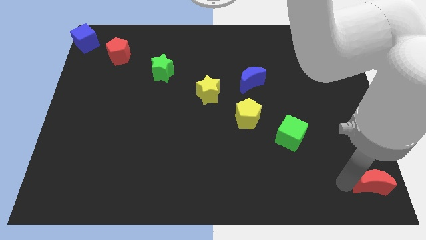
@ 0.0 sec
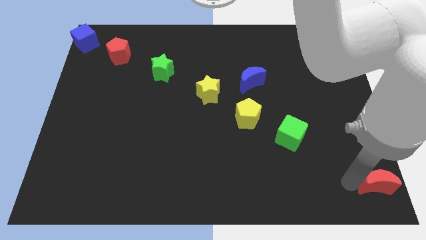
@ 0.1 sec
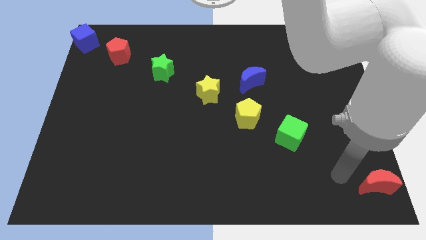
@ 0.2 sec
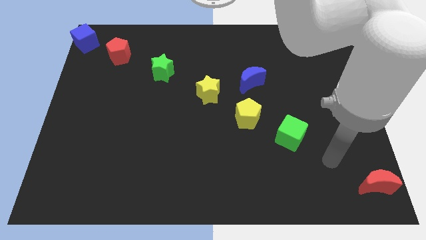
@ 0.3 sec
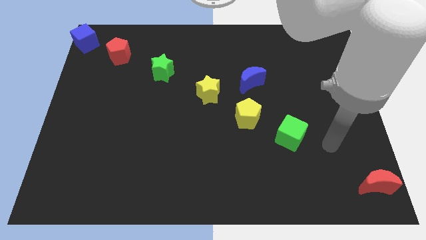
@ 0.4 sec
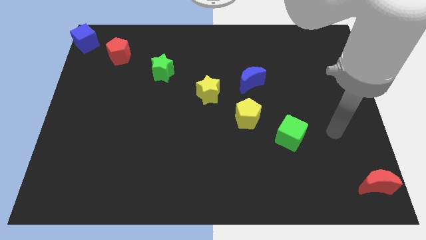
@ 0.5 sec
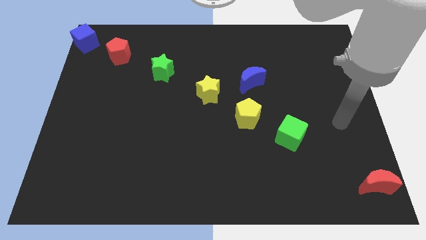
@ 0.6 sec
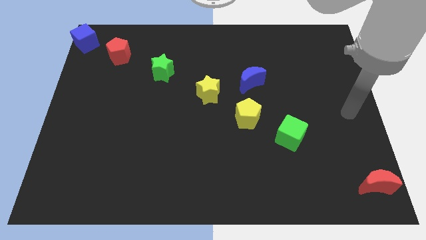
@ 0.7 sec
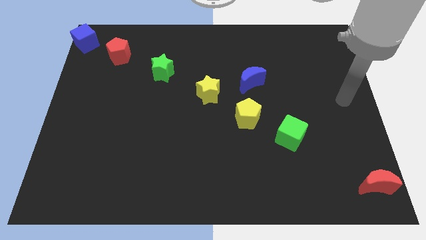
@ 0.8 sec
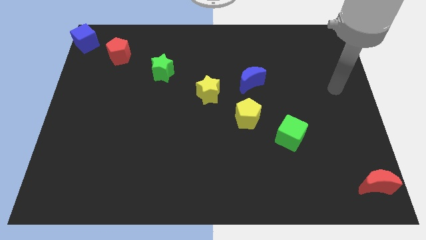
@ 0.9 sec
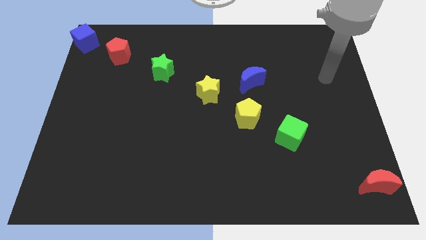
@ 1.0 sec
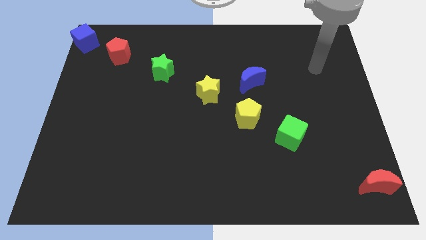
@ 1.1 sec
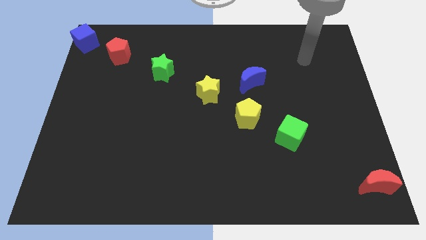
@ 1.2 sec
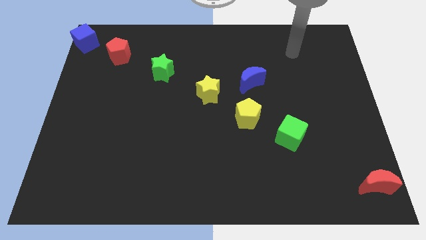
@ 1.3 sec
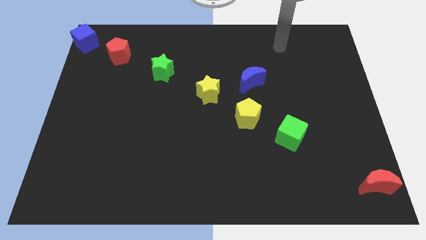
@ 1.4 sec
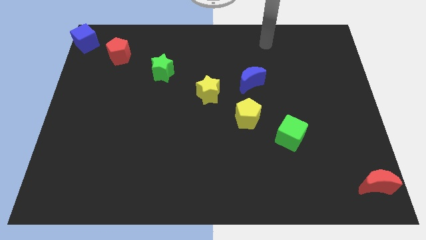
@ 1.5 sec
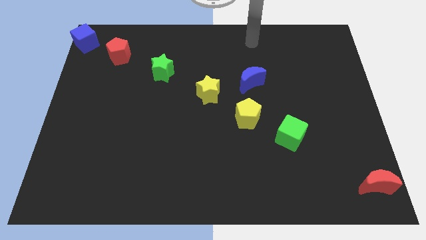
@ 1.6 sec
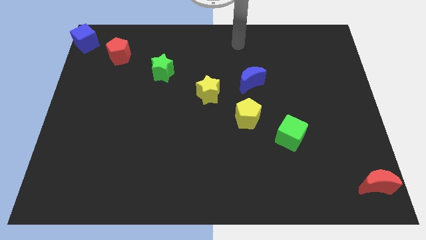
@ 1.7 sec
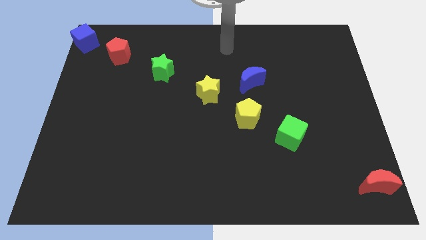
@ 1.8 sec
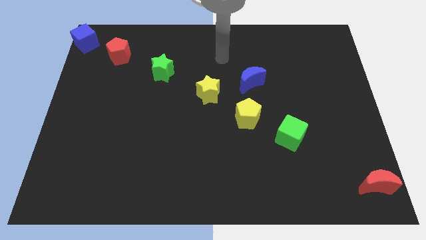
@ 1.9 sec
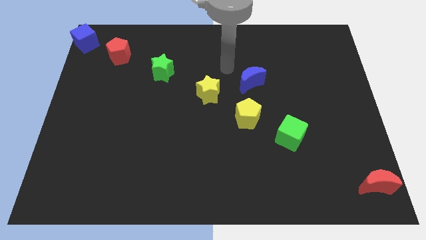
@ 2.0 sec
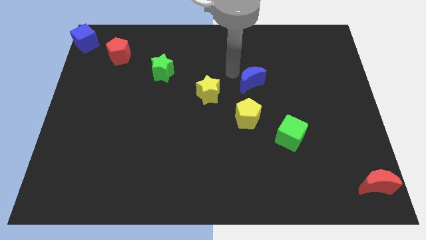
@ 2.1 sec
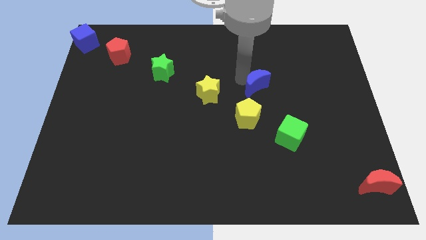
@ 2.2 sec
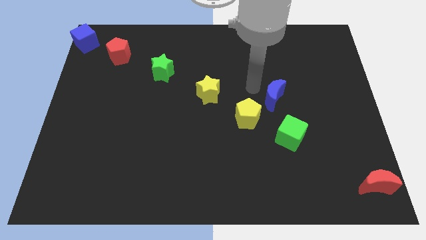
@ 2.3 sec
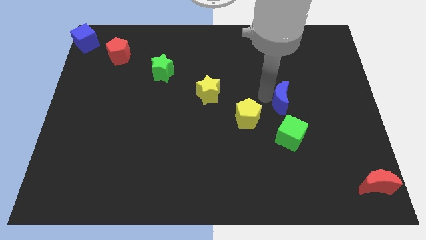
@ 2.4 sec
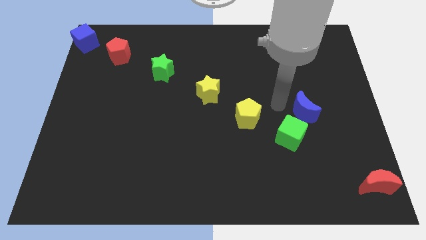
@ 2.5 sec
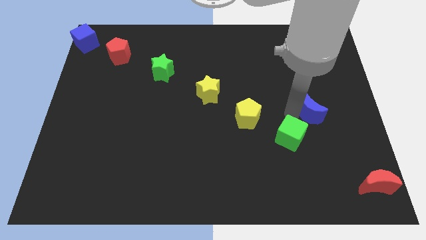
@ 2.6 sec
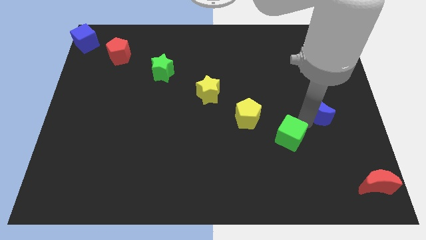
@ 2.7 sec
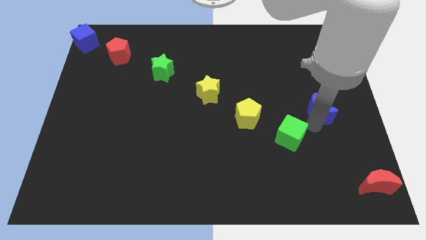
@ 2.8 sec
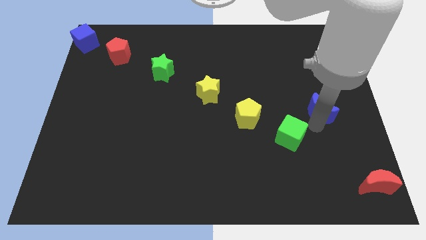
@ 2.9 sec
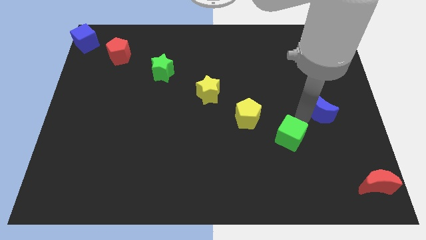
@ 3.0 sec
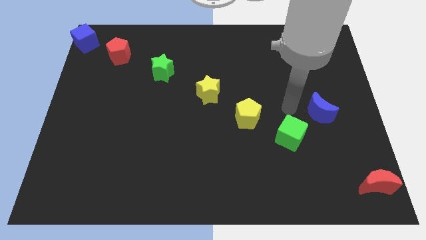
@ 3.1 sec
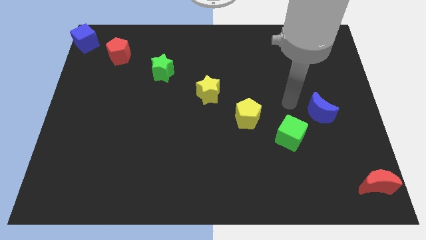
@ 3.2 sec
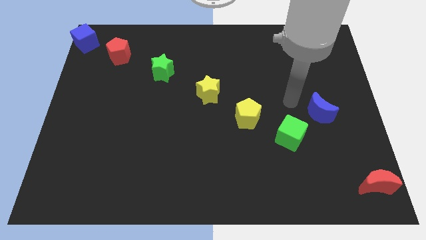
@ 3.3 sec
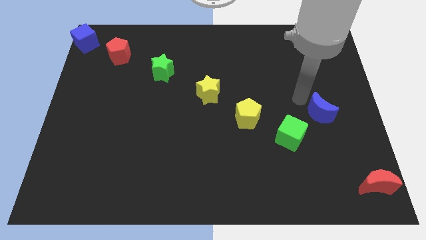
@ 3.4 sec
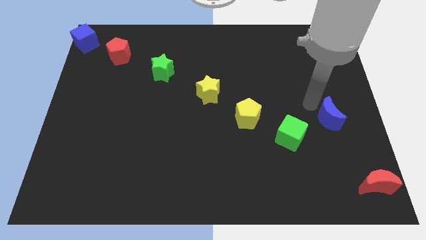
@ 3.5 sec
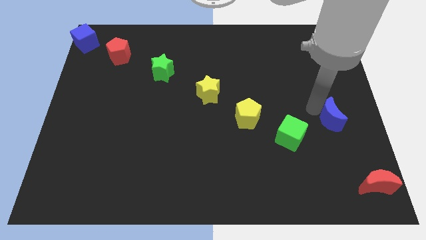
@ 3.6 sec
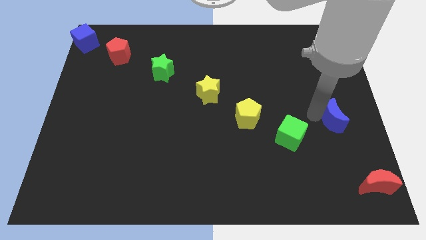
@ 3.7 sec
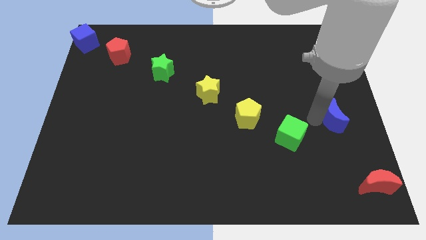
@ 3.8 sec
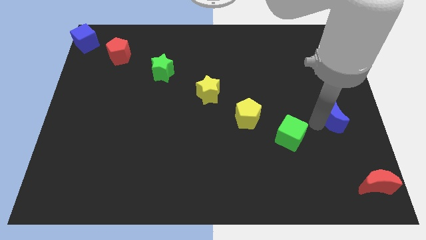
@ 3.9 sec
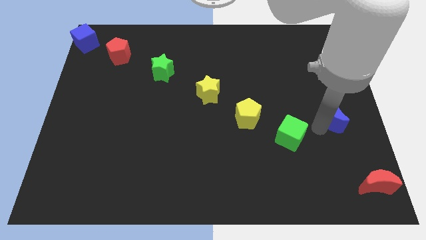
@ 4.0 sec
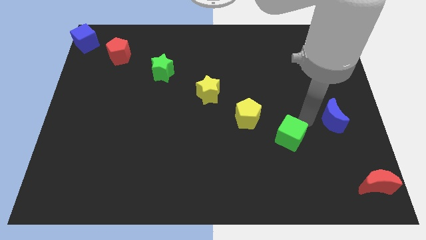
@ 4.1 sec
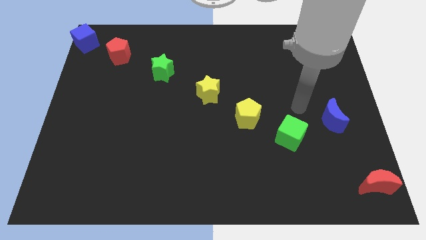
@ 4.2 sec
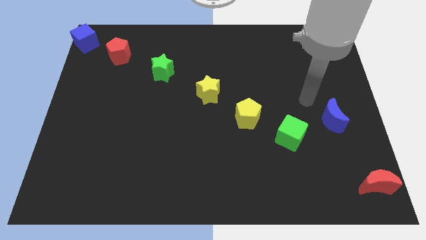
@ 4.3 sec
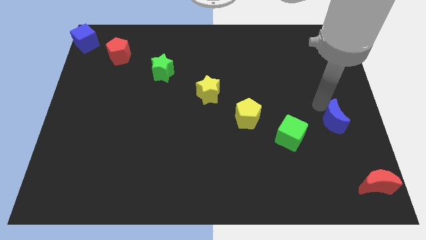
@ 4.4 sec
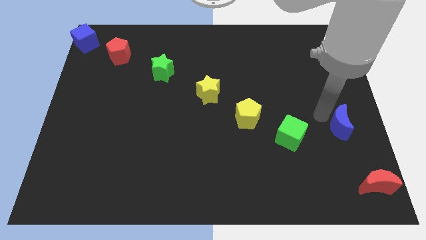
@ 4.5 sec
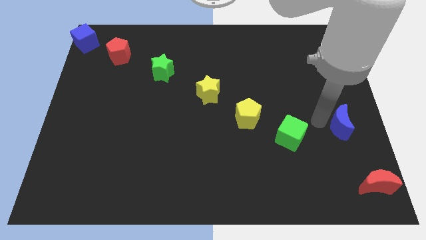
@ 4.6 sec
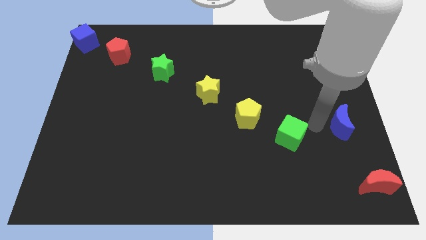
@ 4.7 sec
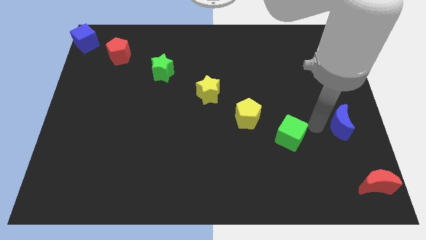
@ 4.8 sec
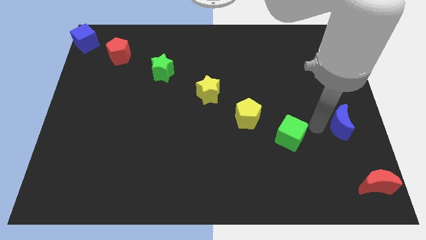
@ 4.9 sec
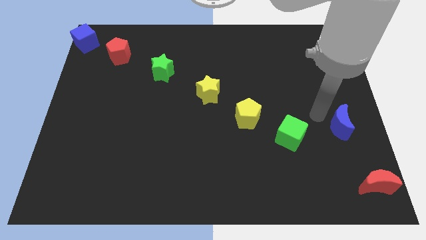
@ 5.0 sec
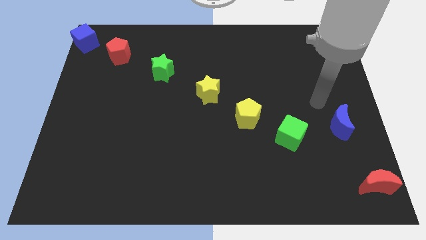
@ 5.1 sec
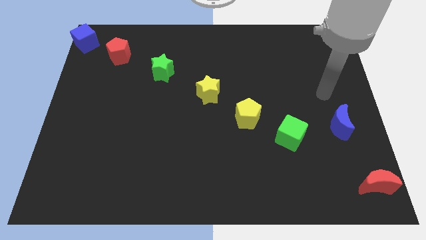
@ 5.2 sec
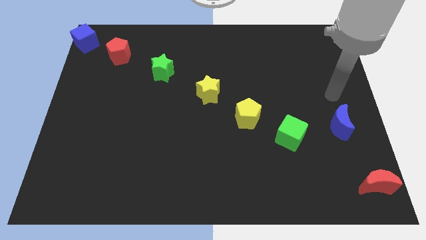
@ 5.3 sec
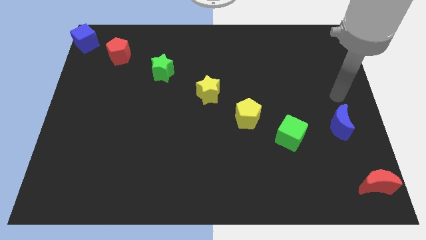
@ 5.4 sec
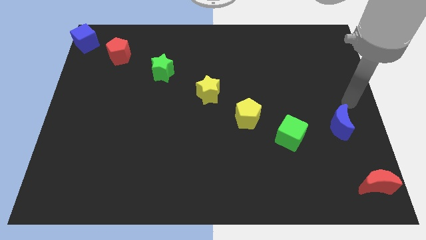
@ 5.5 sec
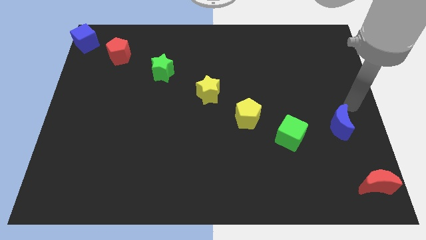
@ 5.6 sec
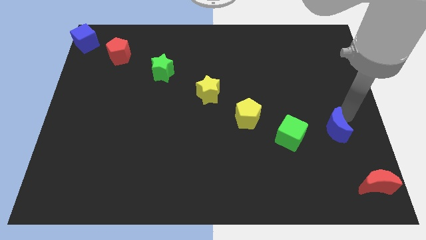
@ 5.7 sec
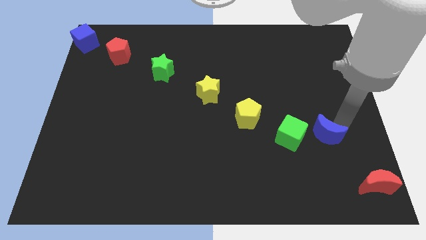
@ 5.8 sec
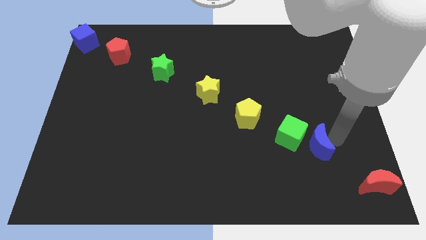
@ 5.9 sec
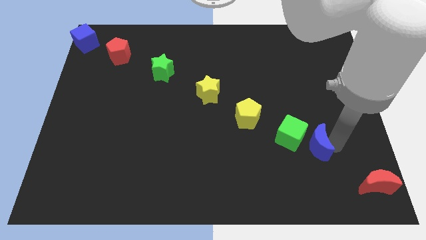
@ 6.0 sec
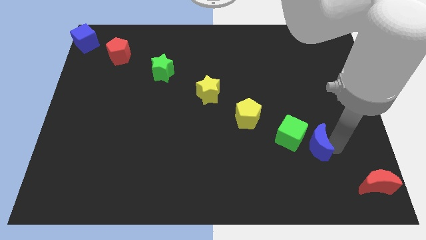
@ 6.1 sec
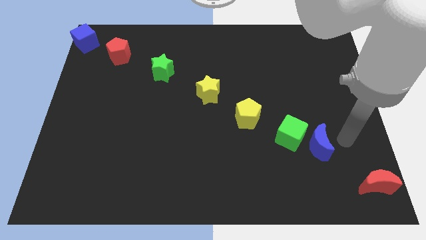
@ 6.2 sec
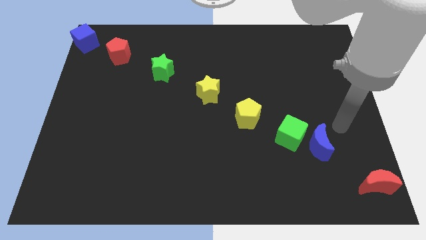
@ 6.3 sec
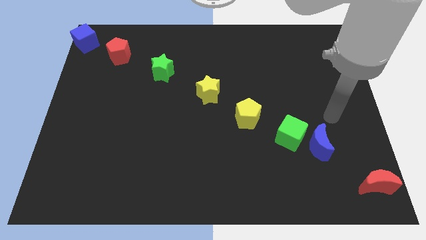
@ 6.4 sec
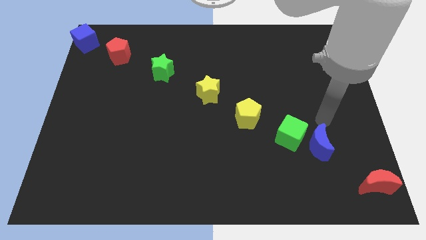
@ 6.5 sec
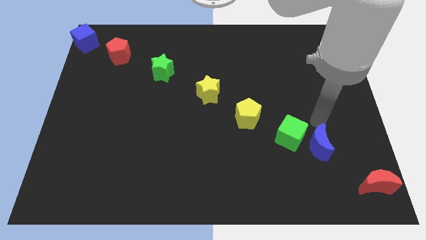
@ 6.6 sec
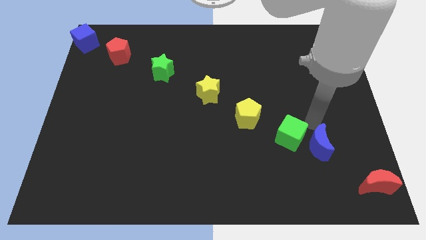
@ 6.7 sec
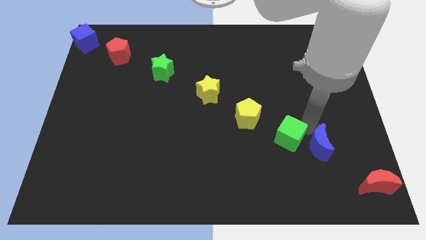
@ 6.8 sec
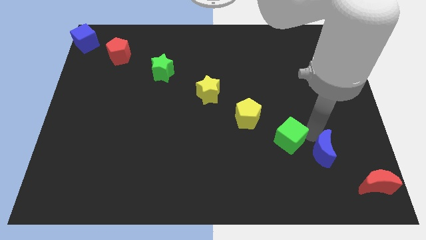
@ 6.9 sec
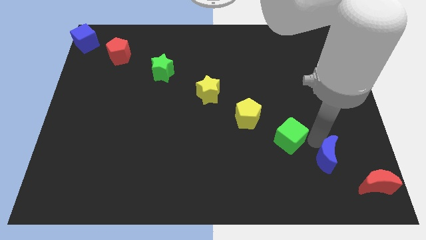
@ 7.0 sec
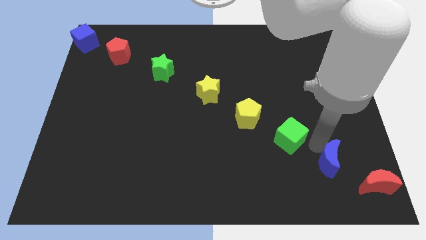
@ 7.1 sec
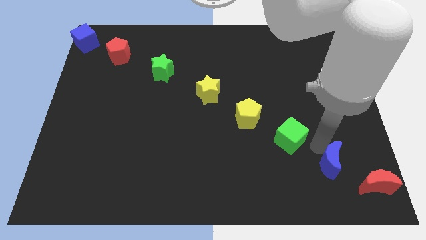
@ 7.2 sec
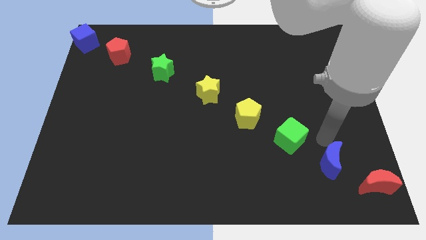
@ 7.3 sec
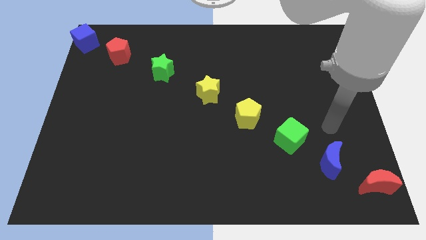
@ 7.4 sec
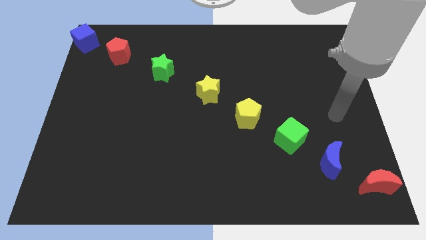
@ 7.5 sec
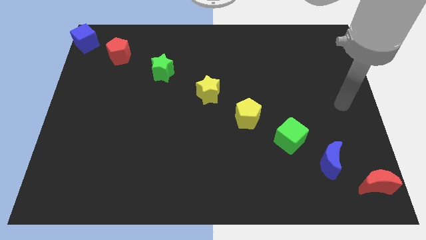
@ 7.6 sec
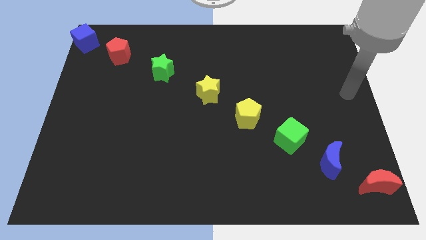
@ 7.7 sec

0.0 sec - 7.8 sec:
place the blue crescent to form a diagonal line with a group of blocks

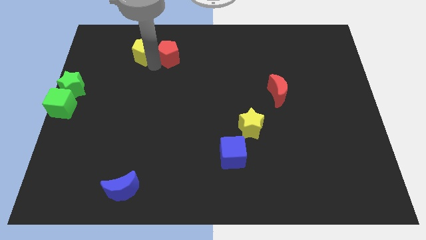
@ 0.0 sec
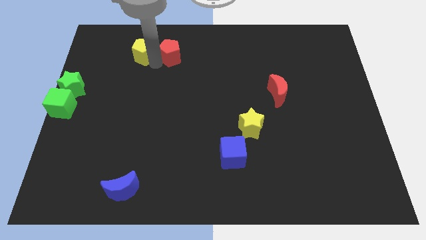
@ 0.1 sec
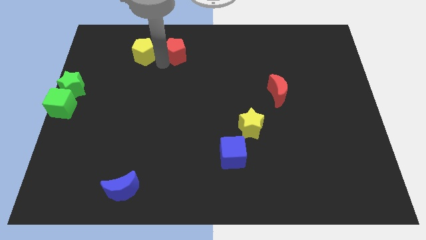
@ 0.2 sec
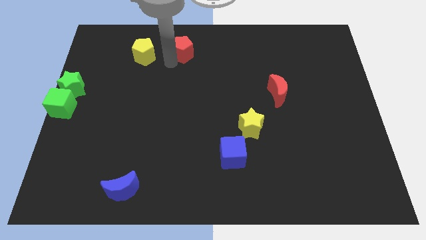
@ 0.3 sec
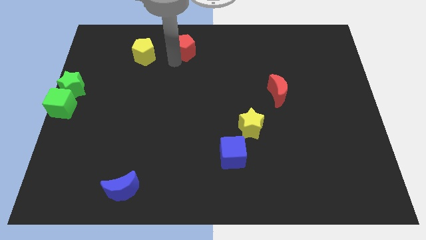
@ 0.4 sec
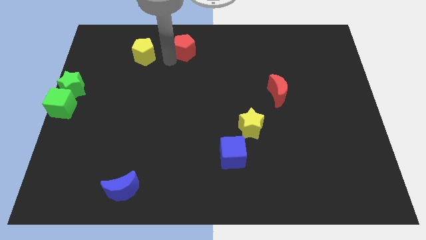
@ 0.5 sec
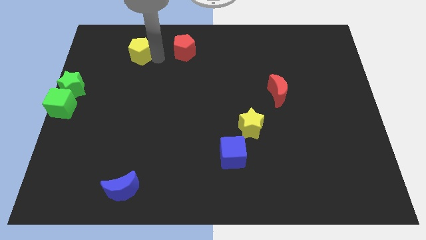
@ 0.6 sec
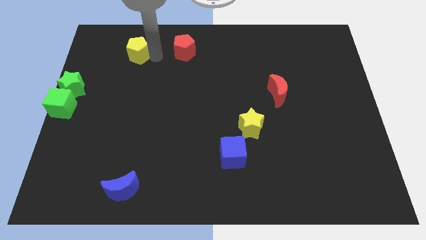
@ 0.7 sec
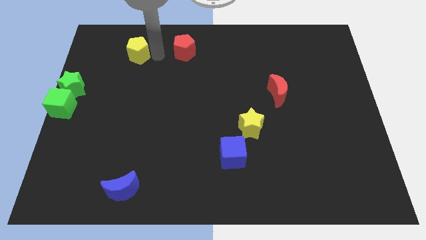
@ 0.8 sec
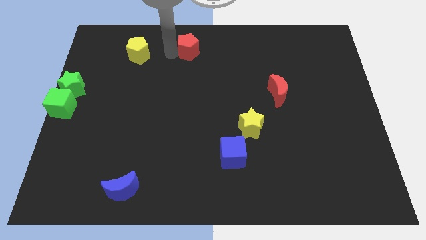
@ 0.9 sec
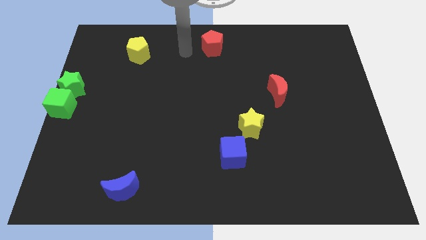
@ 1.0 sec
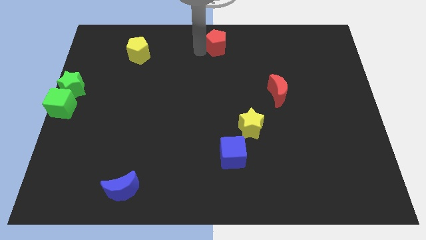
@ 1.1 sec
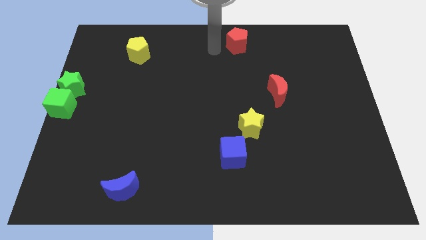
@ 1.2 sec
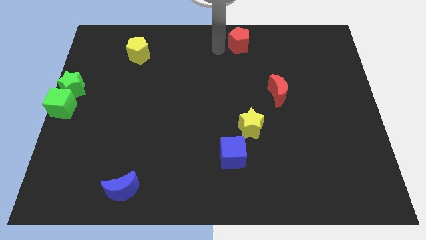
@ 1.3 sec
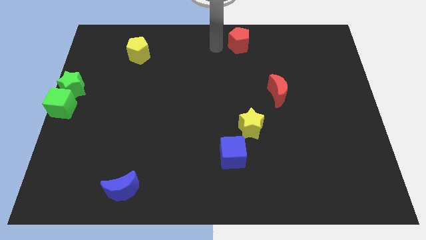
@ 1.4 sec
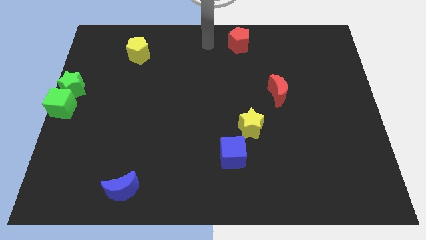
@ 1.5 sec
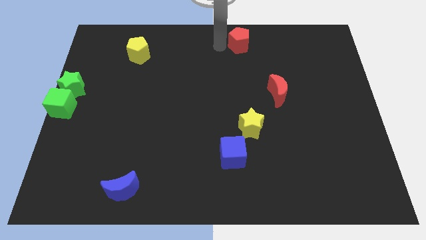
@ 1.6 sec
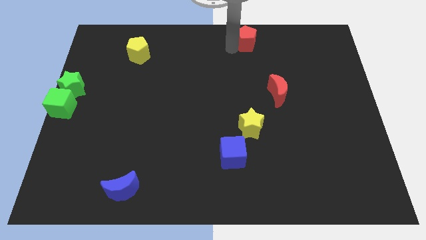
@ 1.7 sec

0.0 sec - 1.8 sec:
separate the red pentagon from yellow pentagon to top
